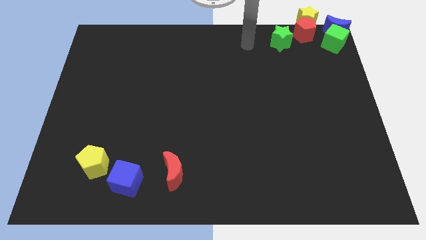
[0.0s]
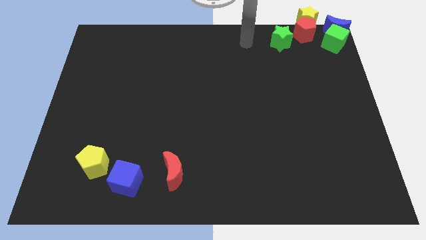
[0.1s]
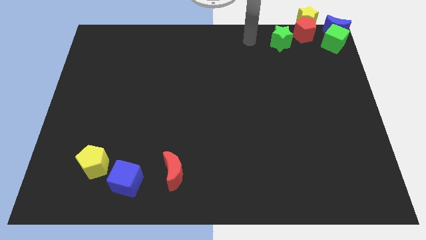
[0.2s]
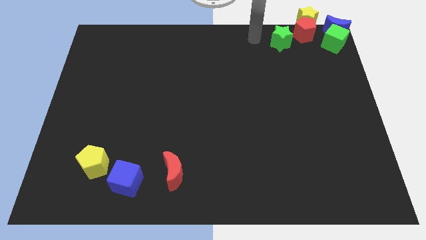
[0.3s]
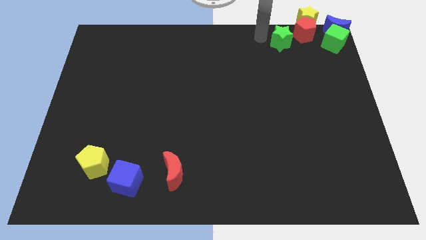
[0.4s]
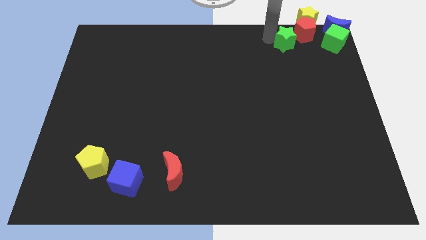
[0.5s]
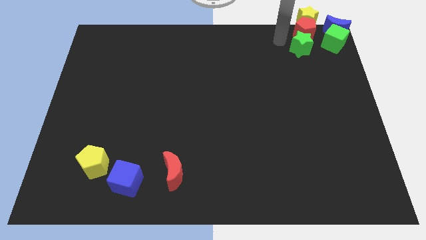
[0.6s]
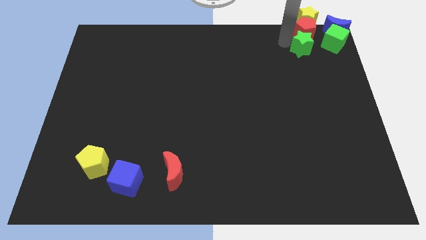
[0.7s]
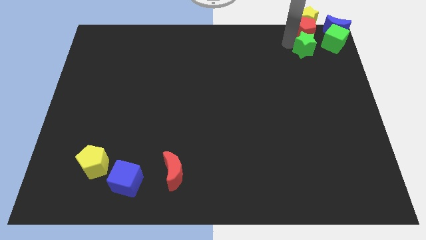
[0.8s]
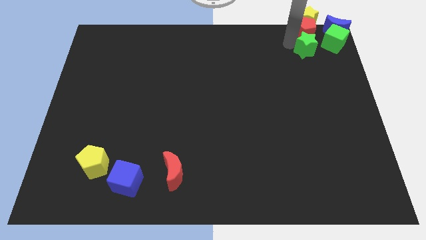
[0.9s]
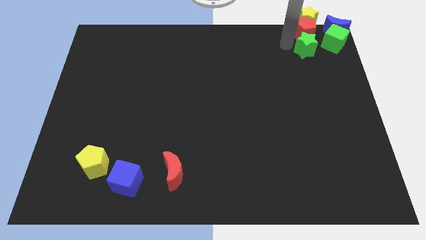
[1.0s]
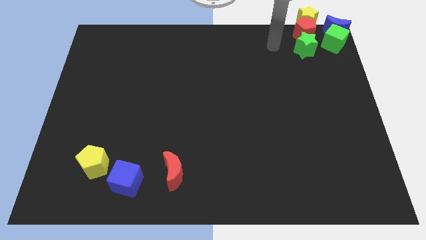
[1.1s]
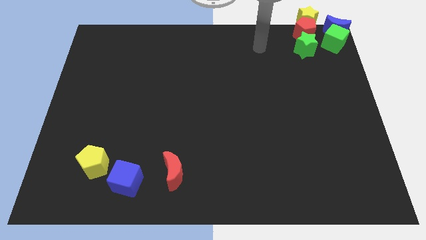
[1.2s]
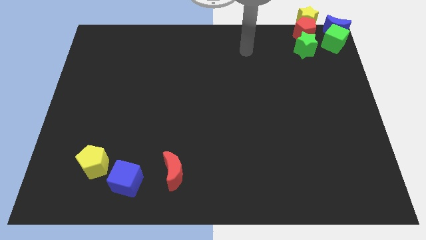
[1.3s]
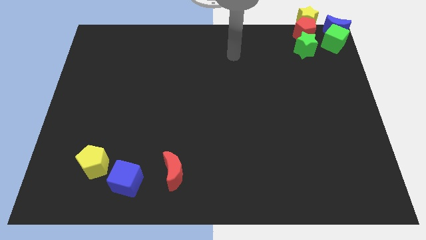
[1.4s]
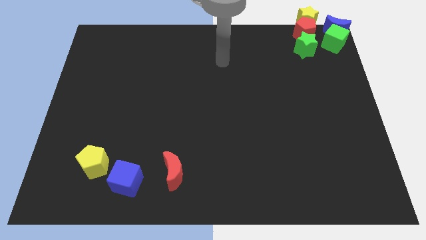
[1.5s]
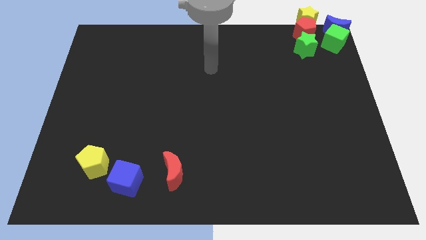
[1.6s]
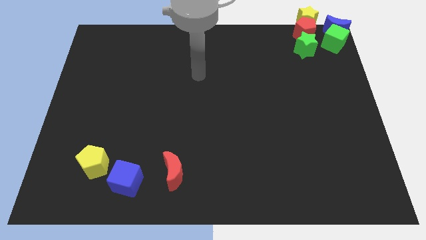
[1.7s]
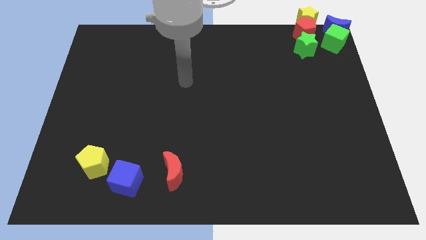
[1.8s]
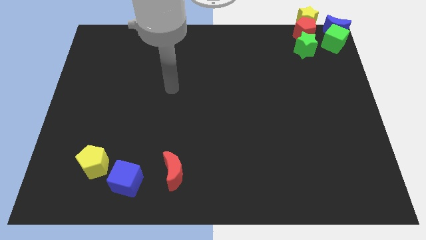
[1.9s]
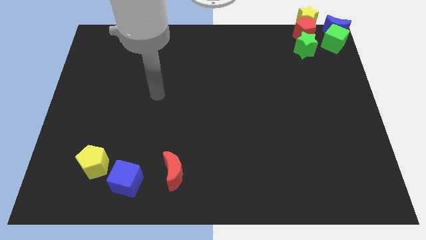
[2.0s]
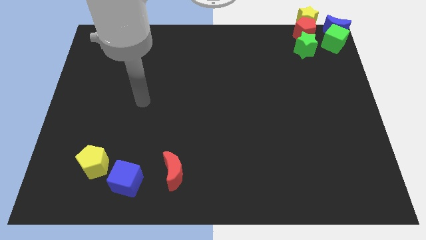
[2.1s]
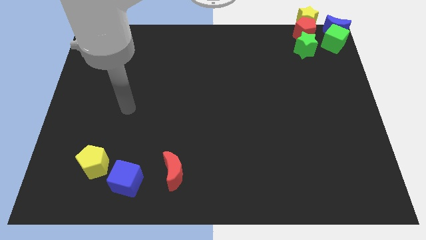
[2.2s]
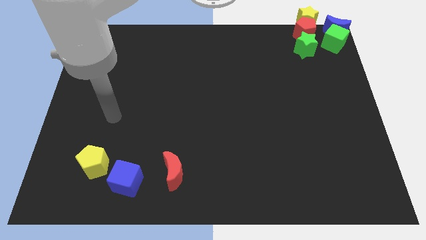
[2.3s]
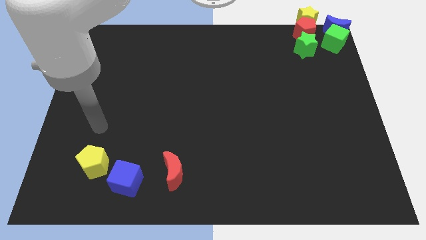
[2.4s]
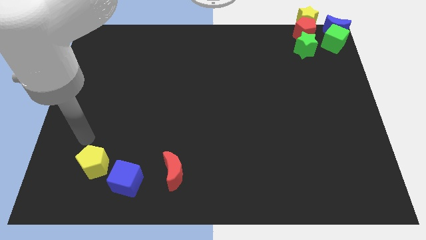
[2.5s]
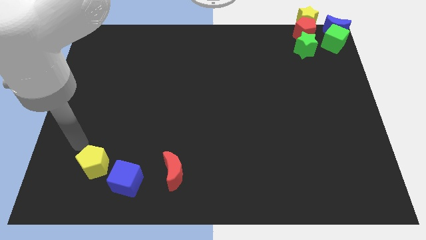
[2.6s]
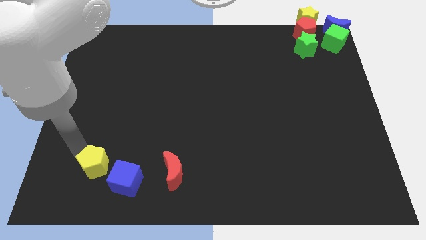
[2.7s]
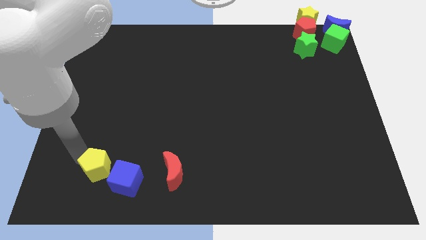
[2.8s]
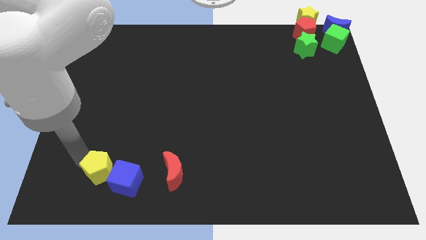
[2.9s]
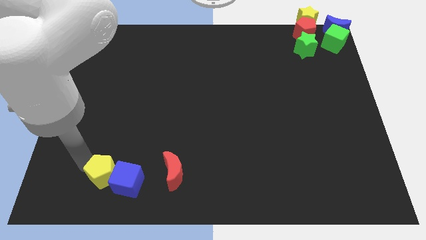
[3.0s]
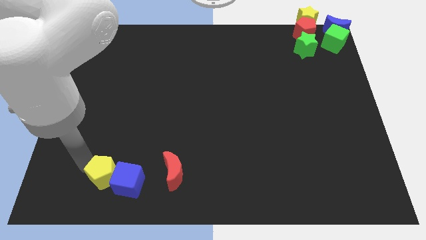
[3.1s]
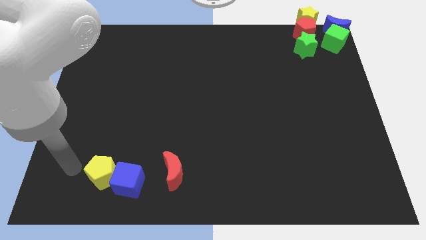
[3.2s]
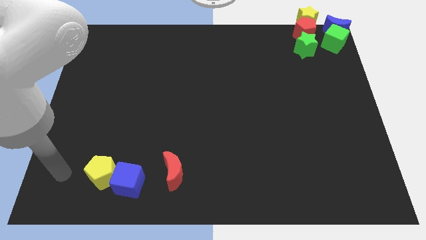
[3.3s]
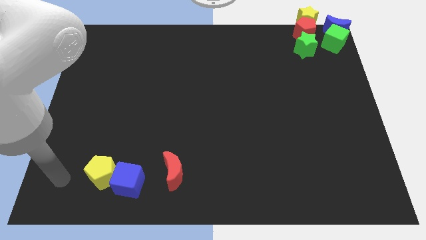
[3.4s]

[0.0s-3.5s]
push the yellow pentagon into the blue cube

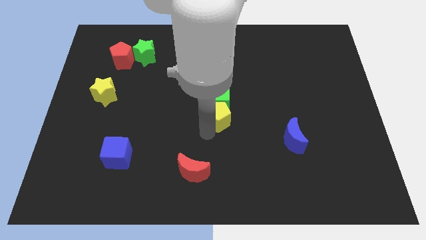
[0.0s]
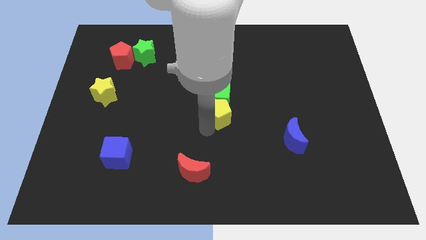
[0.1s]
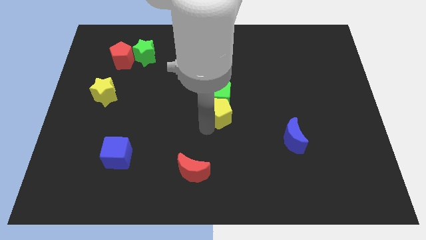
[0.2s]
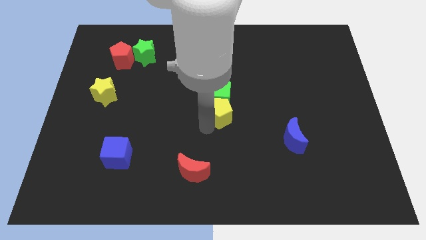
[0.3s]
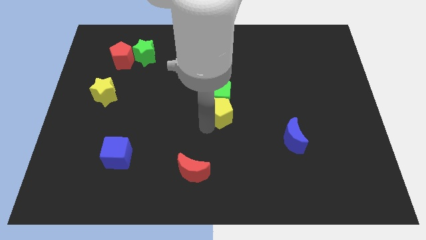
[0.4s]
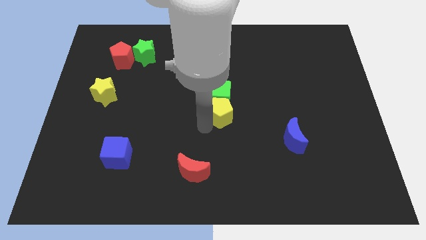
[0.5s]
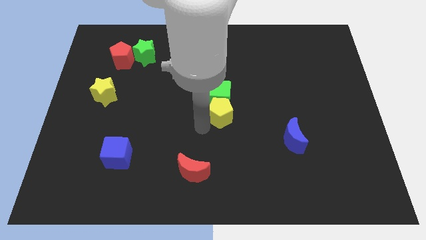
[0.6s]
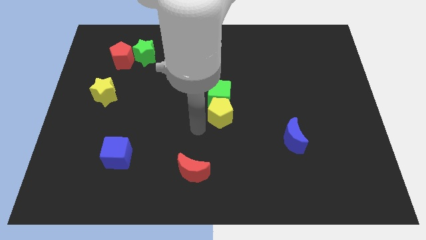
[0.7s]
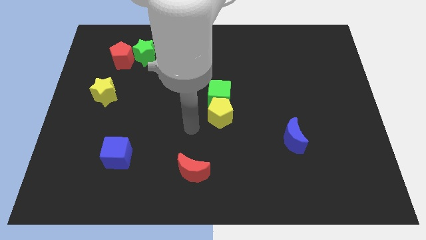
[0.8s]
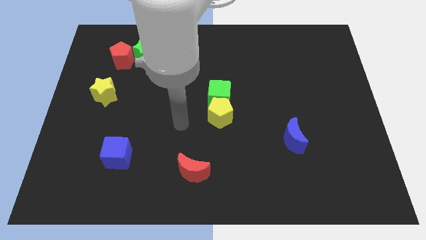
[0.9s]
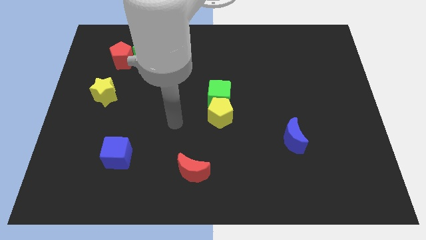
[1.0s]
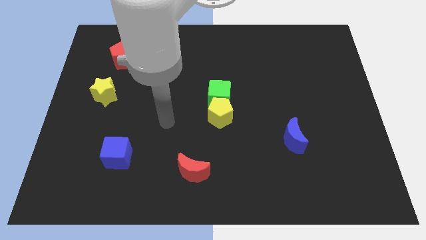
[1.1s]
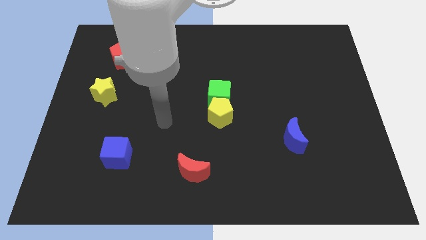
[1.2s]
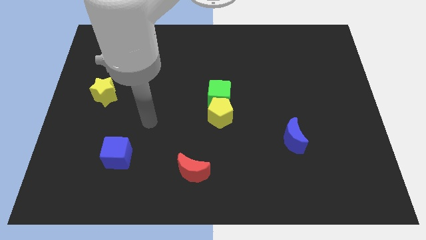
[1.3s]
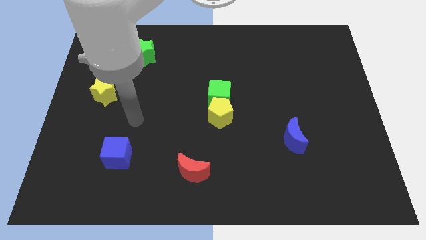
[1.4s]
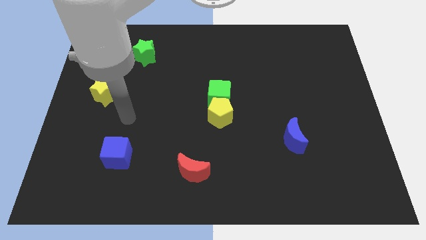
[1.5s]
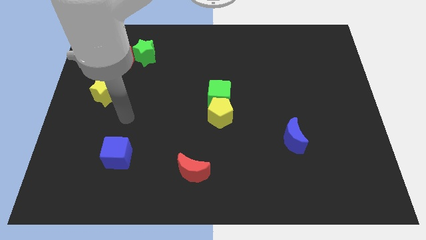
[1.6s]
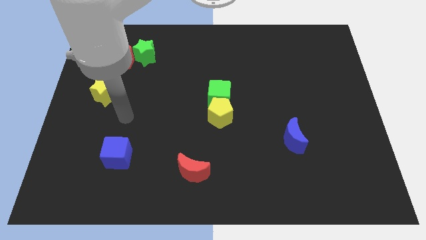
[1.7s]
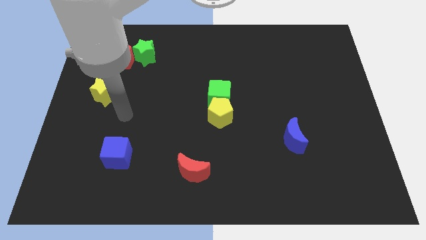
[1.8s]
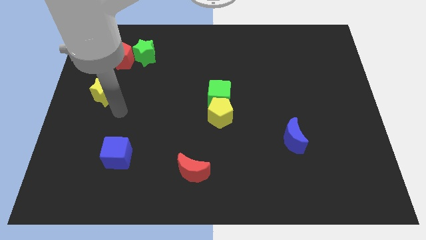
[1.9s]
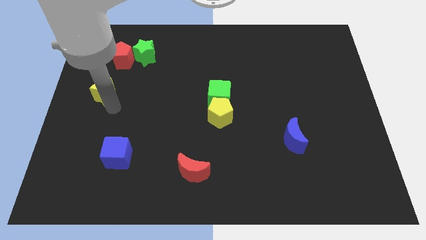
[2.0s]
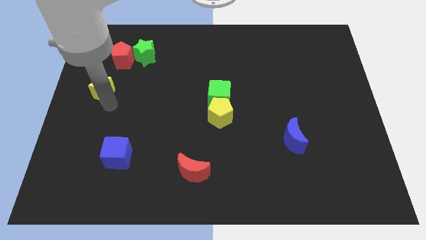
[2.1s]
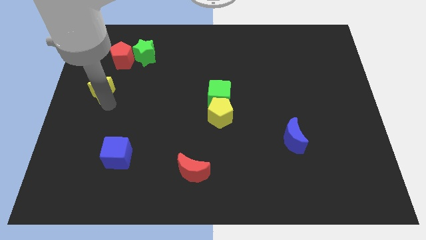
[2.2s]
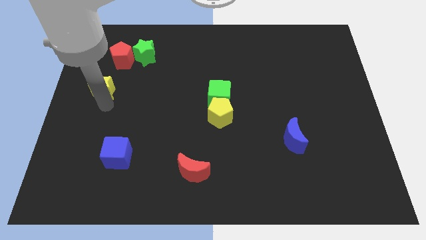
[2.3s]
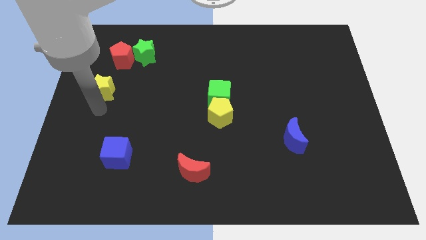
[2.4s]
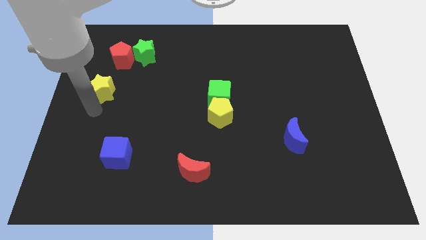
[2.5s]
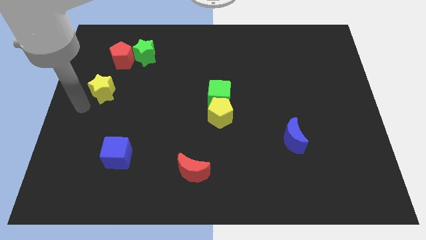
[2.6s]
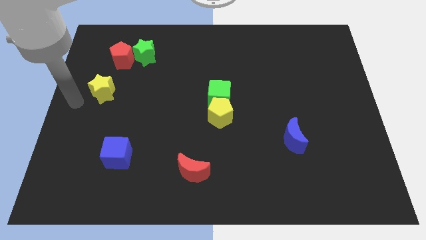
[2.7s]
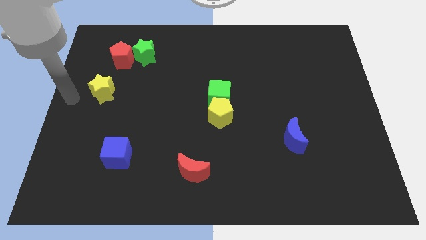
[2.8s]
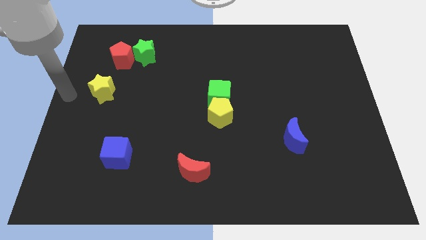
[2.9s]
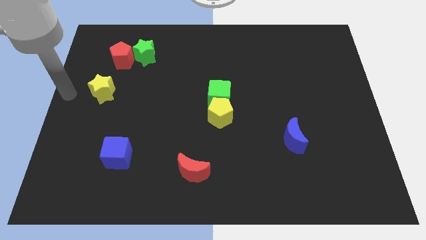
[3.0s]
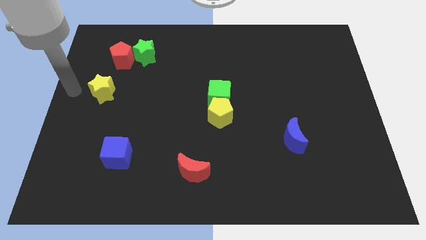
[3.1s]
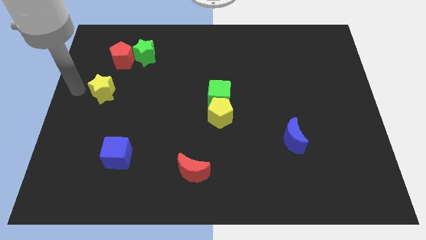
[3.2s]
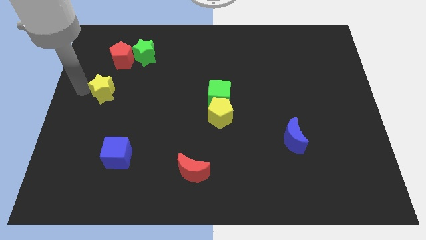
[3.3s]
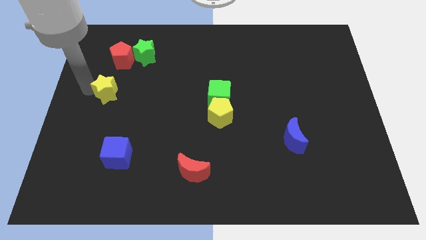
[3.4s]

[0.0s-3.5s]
move your arm from the yellow pentagon to the yellow star

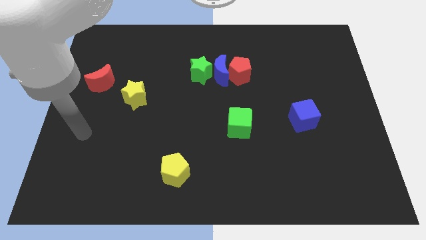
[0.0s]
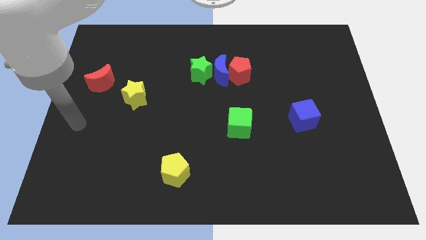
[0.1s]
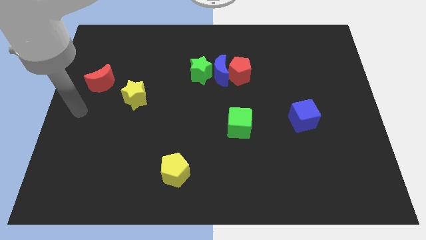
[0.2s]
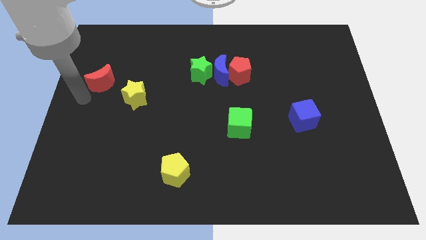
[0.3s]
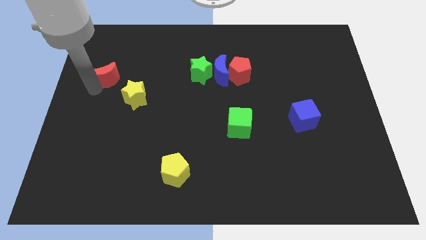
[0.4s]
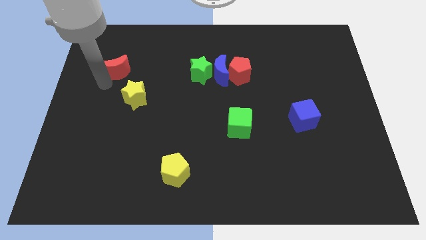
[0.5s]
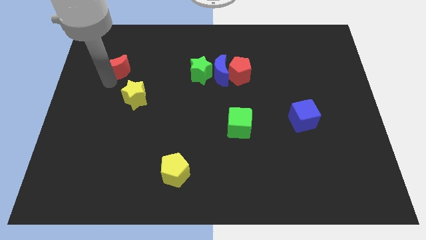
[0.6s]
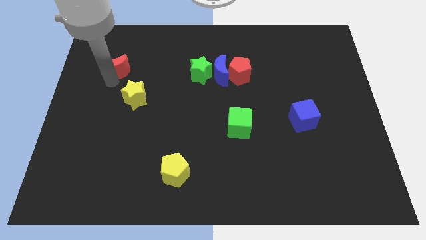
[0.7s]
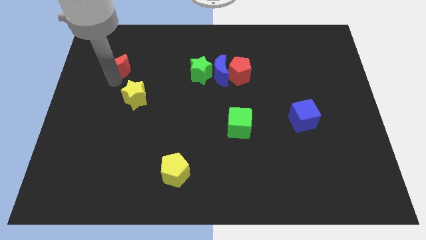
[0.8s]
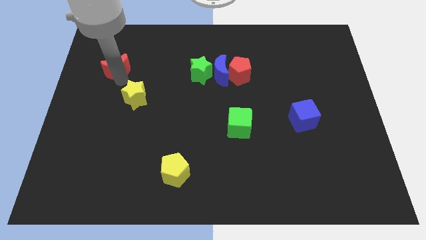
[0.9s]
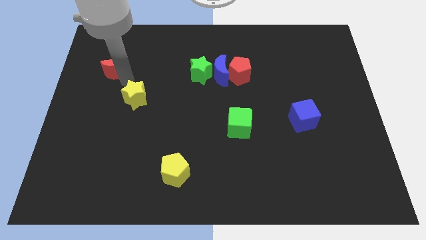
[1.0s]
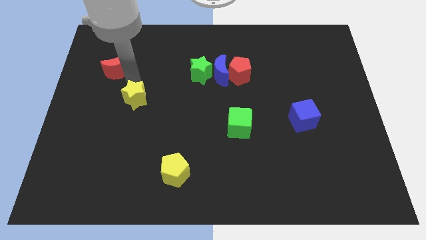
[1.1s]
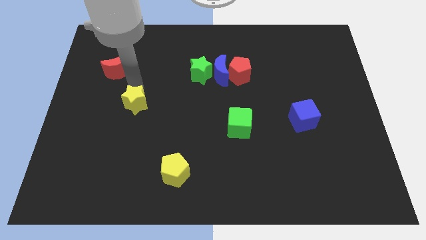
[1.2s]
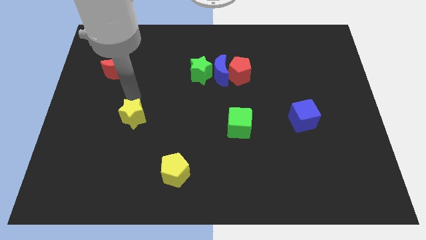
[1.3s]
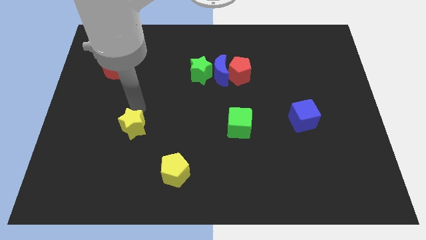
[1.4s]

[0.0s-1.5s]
slightly push the red pentagon and yellow star away from each other

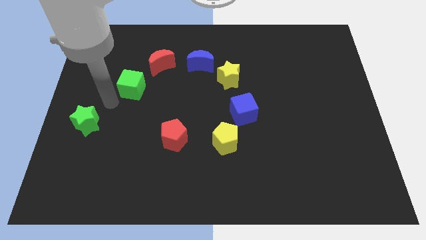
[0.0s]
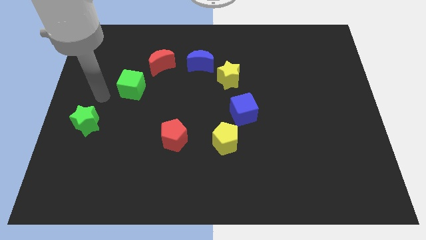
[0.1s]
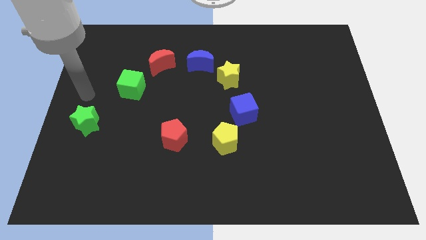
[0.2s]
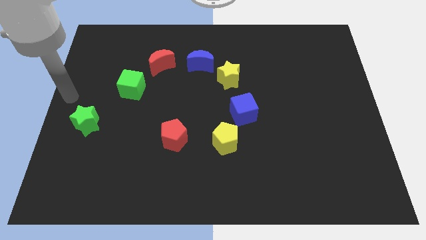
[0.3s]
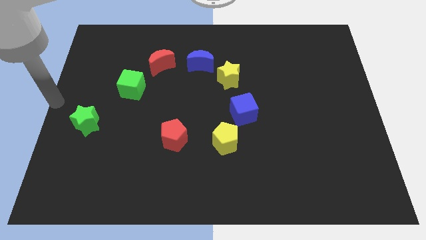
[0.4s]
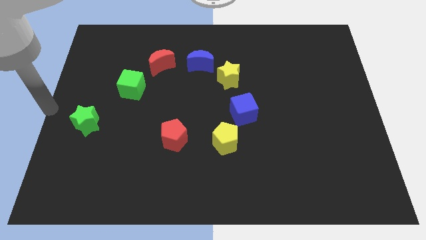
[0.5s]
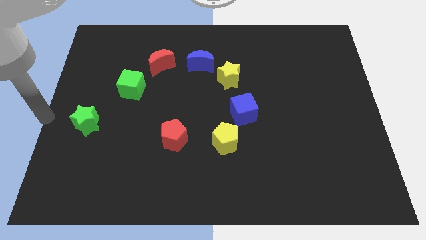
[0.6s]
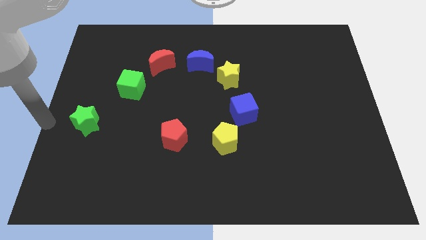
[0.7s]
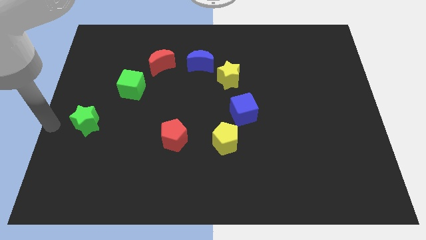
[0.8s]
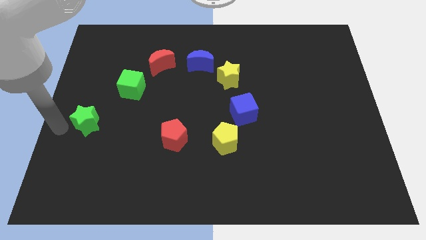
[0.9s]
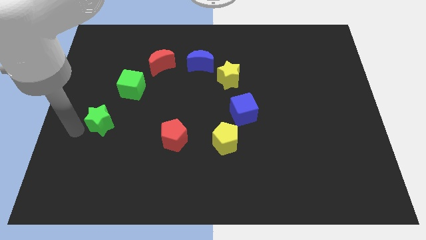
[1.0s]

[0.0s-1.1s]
place the arm left to the green star
